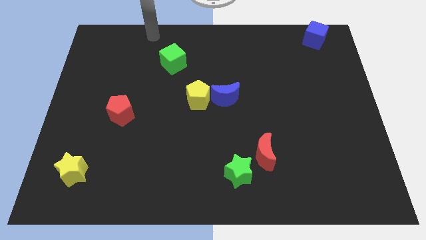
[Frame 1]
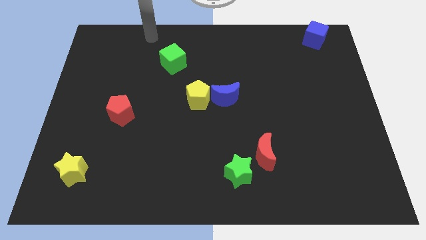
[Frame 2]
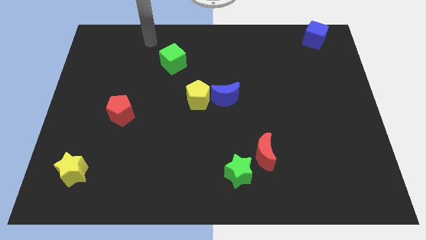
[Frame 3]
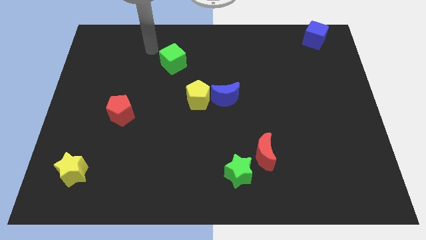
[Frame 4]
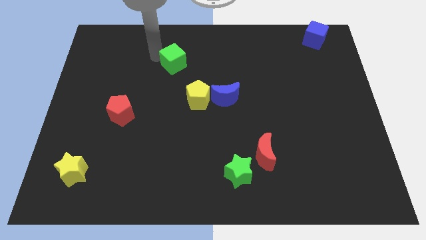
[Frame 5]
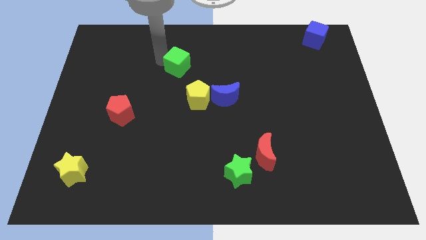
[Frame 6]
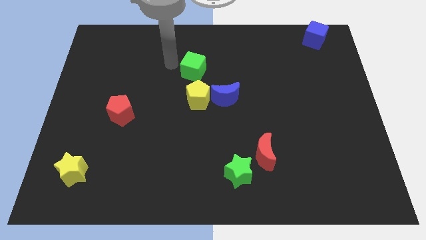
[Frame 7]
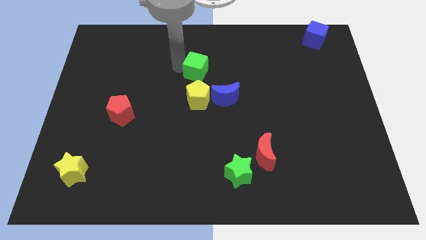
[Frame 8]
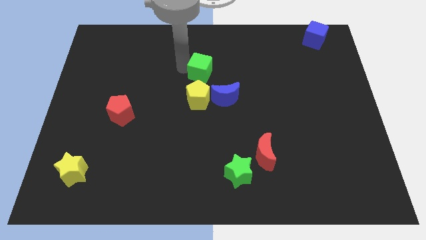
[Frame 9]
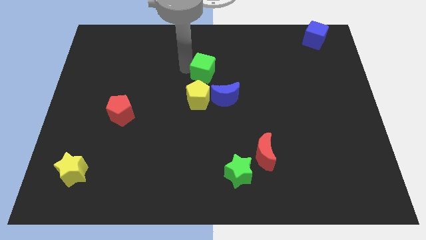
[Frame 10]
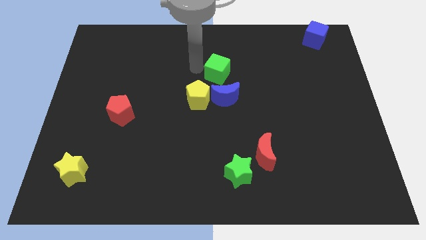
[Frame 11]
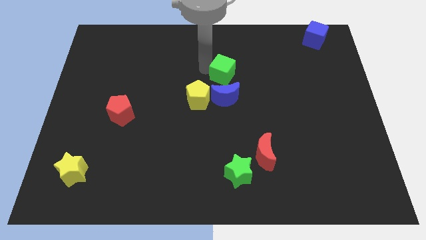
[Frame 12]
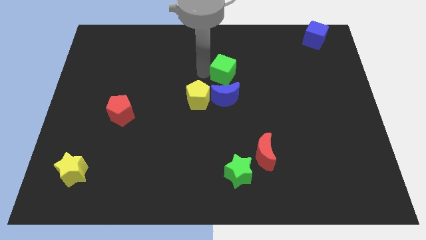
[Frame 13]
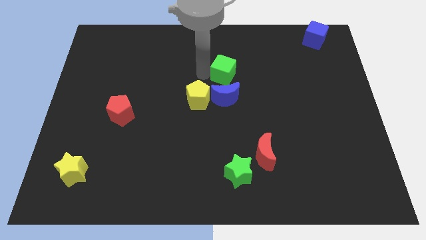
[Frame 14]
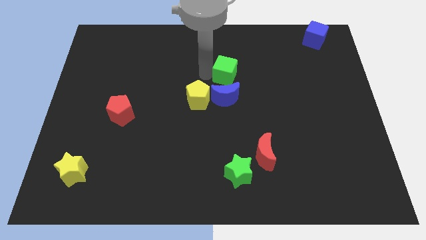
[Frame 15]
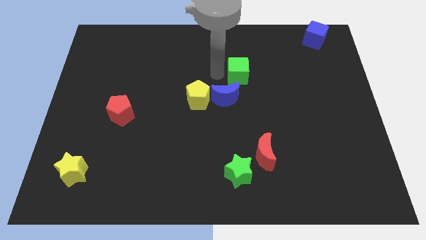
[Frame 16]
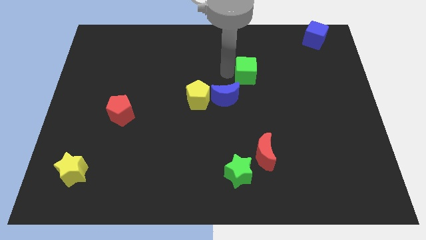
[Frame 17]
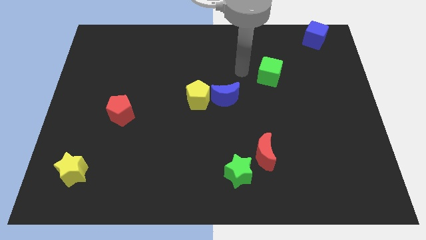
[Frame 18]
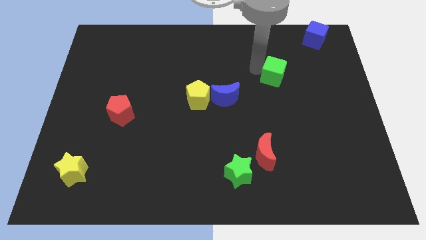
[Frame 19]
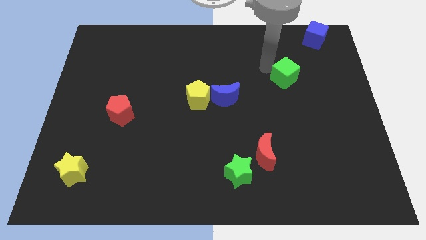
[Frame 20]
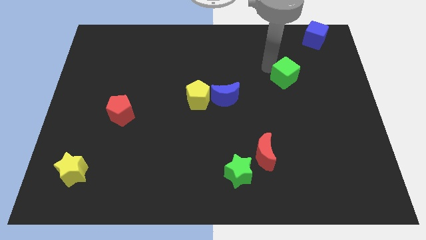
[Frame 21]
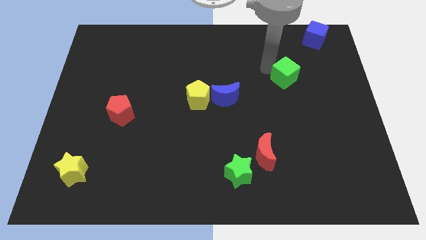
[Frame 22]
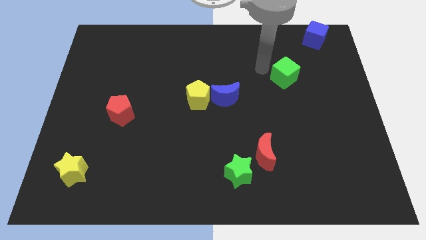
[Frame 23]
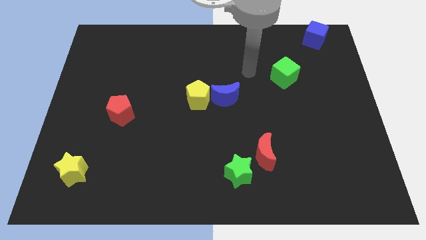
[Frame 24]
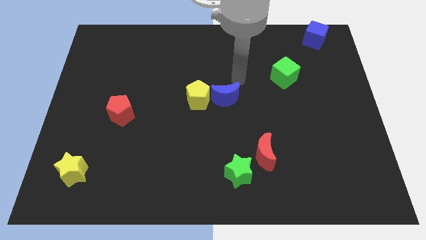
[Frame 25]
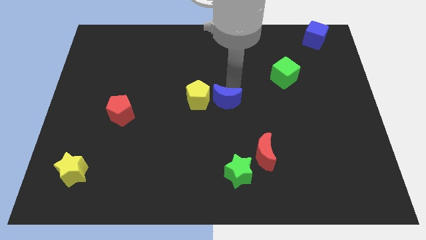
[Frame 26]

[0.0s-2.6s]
move the green cube diagonal below the blue cube

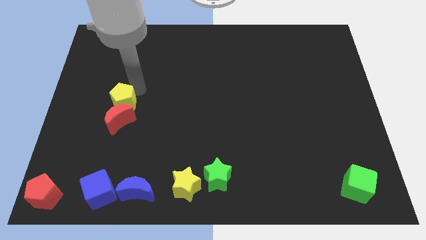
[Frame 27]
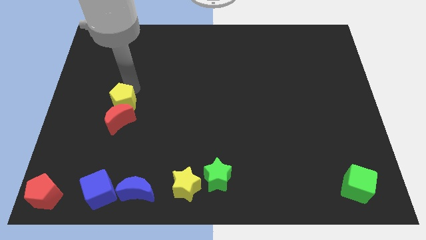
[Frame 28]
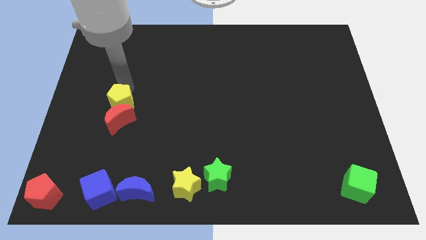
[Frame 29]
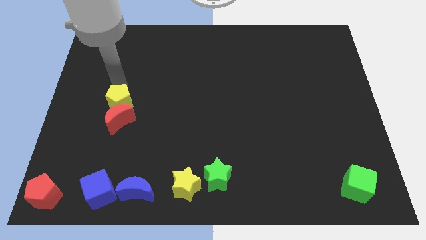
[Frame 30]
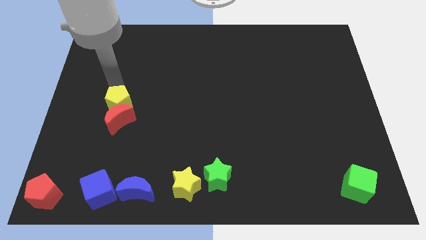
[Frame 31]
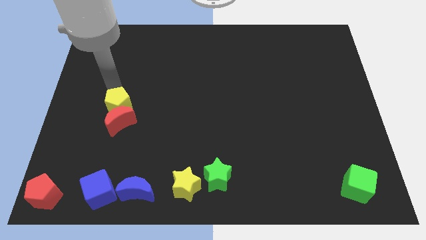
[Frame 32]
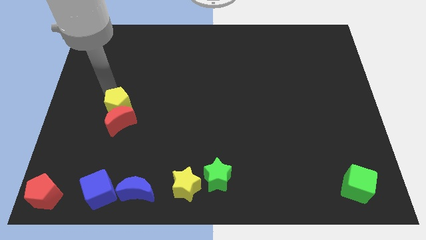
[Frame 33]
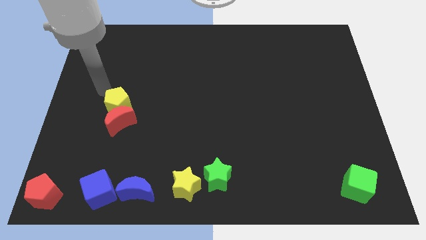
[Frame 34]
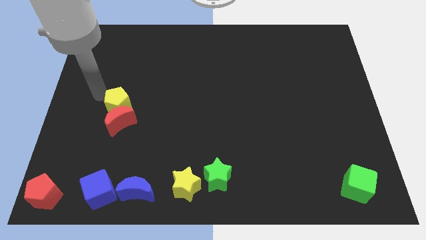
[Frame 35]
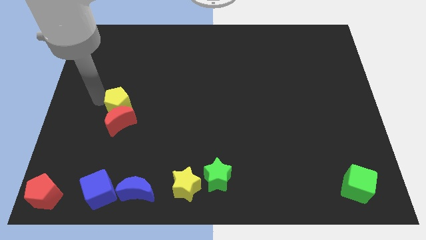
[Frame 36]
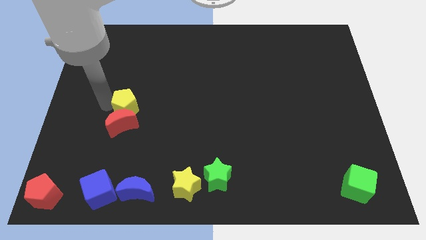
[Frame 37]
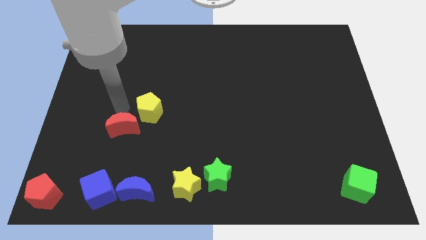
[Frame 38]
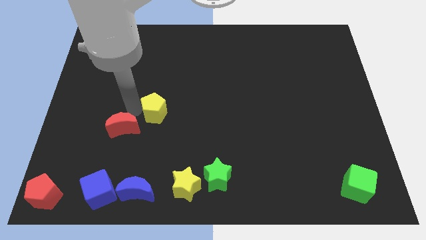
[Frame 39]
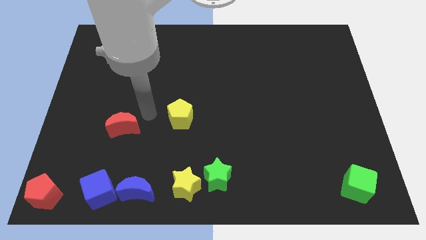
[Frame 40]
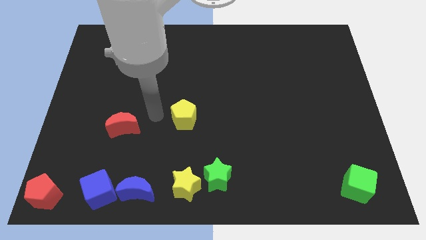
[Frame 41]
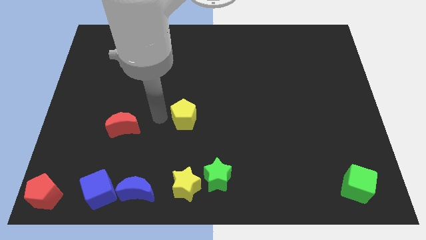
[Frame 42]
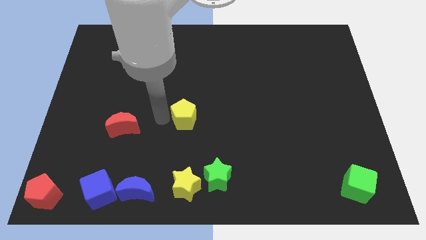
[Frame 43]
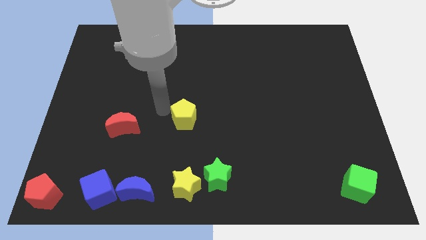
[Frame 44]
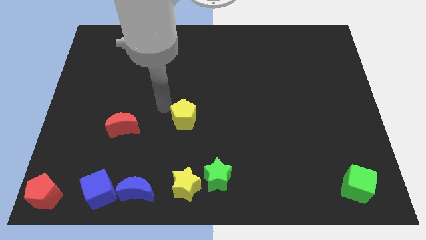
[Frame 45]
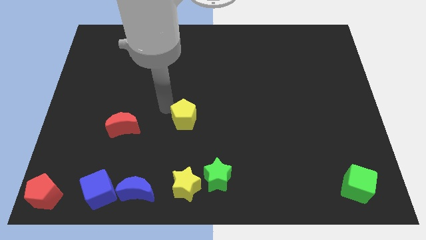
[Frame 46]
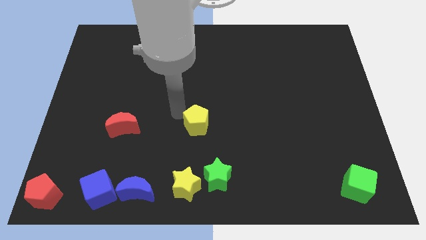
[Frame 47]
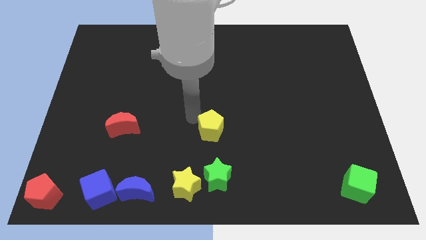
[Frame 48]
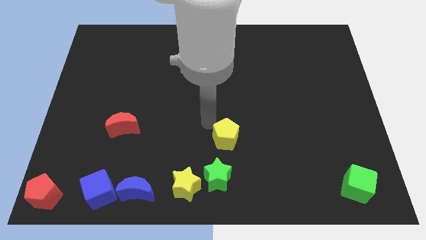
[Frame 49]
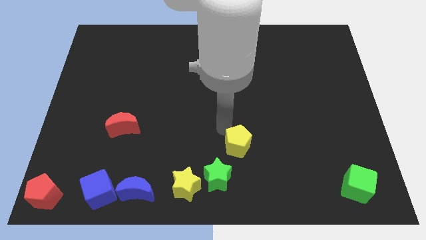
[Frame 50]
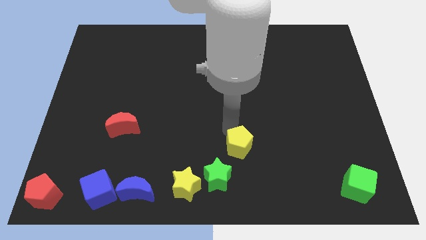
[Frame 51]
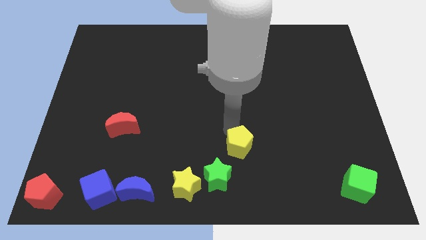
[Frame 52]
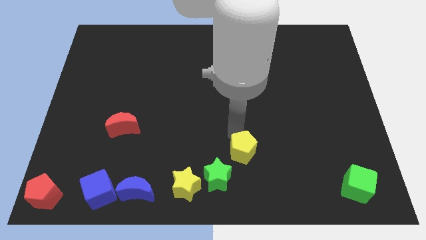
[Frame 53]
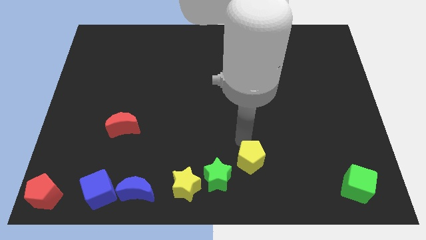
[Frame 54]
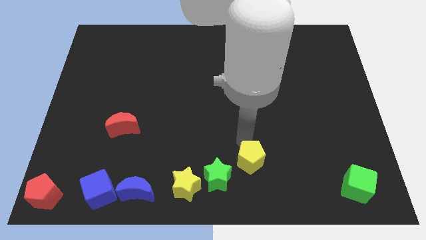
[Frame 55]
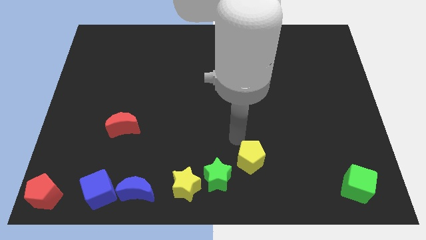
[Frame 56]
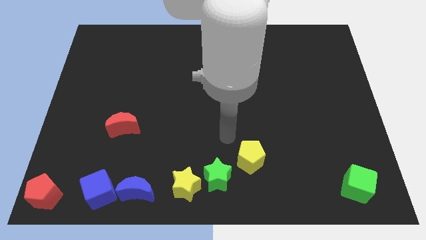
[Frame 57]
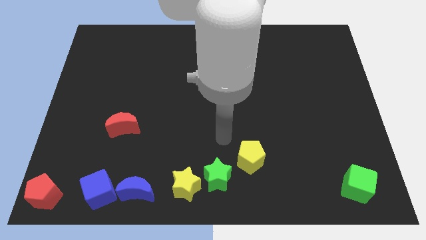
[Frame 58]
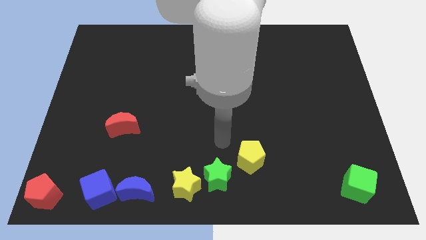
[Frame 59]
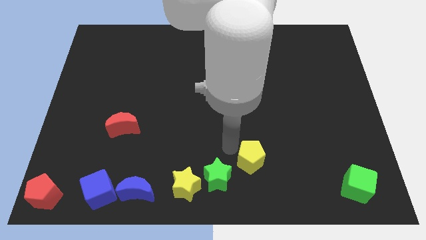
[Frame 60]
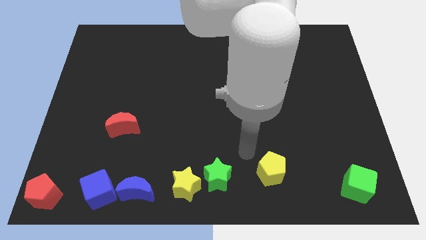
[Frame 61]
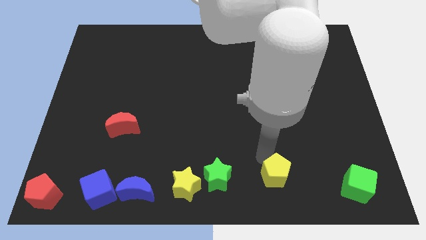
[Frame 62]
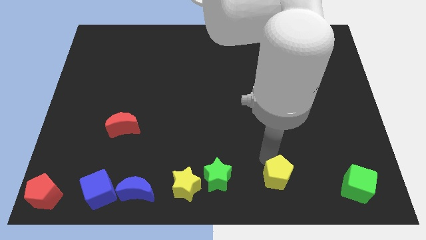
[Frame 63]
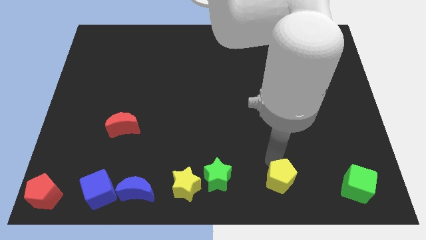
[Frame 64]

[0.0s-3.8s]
place the yellow pentagon in between the green star and the green cube

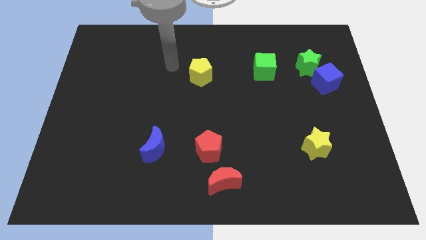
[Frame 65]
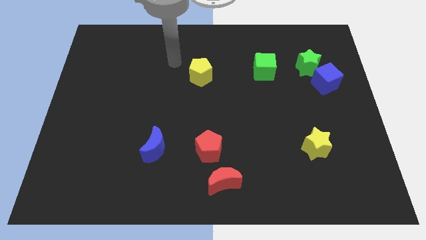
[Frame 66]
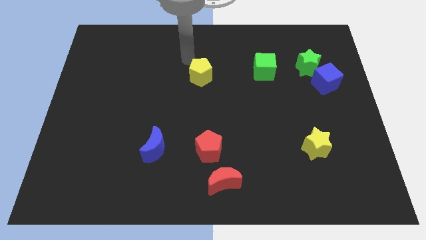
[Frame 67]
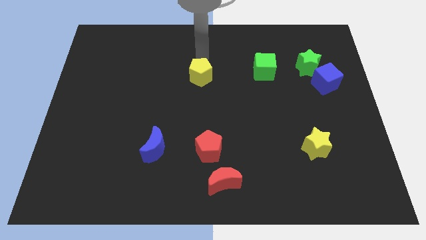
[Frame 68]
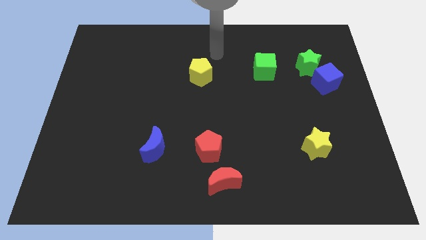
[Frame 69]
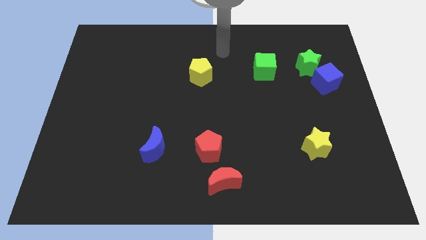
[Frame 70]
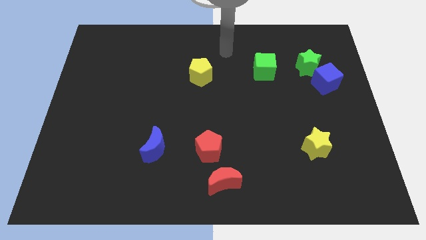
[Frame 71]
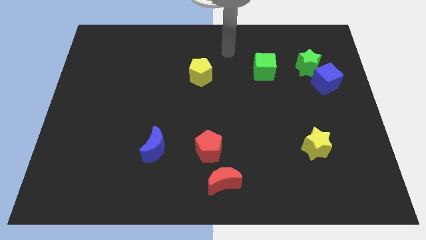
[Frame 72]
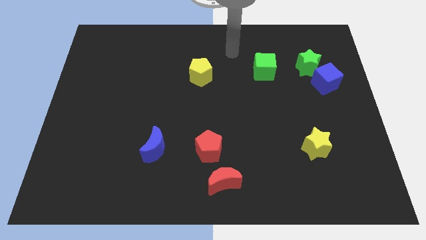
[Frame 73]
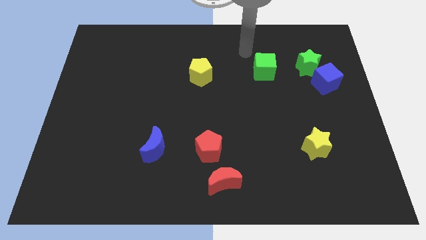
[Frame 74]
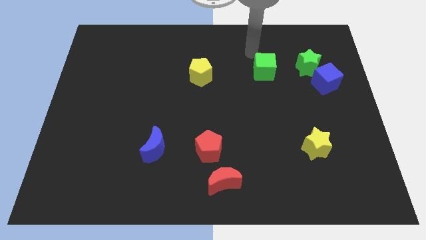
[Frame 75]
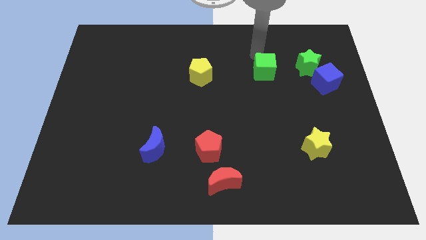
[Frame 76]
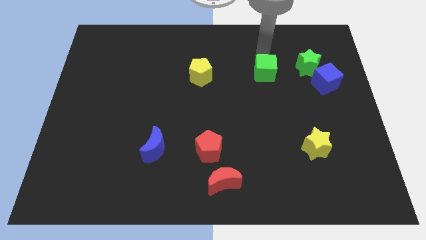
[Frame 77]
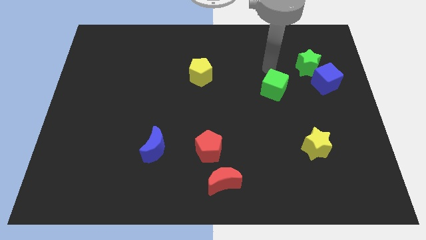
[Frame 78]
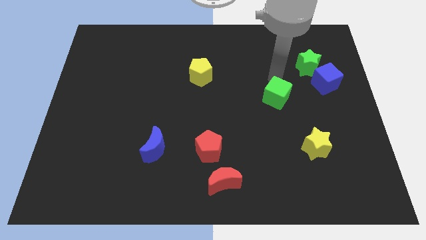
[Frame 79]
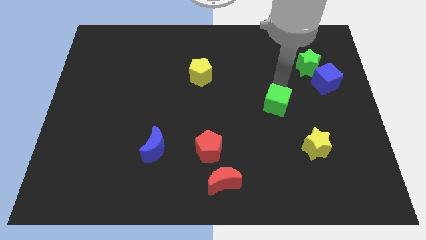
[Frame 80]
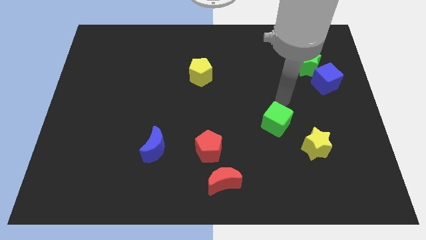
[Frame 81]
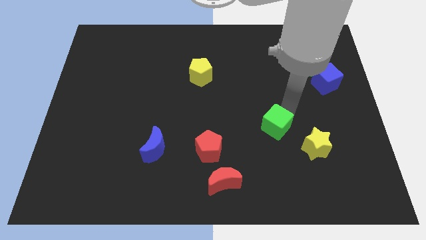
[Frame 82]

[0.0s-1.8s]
move the green cube towards the bottom center

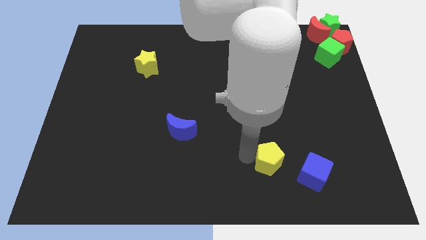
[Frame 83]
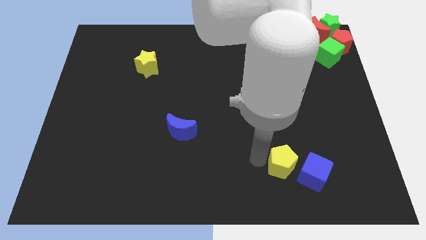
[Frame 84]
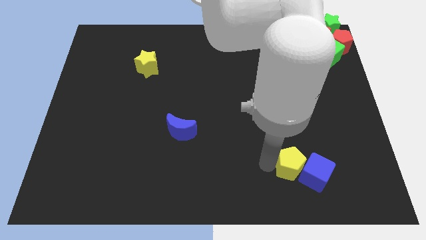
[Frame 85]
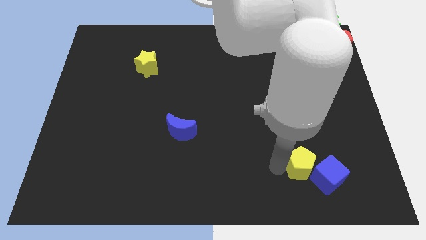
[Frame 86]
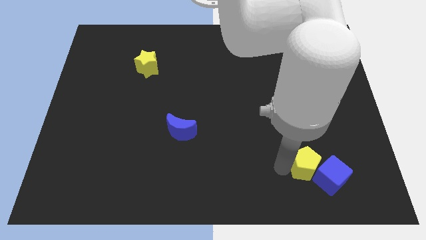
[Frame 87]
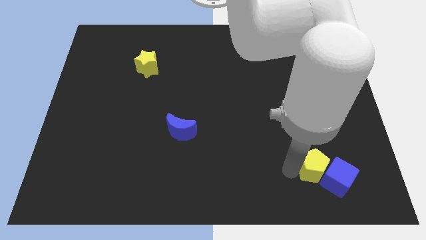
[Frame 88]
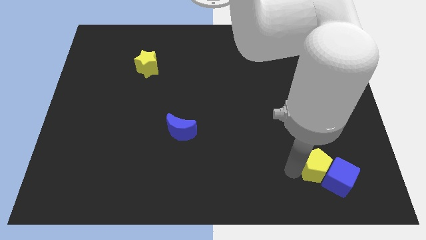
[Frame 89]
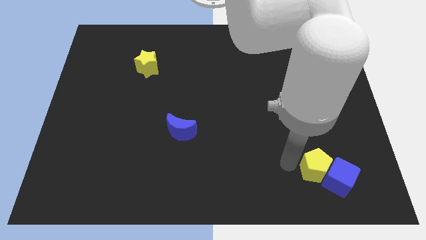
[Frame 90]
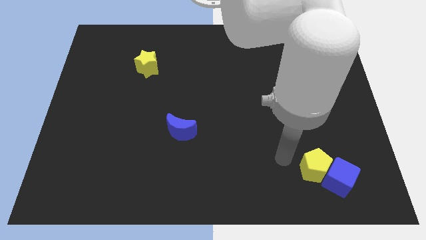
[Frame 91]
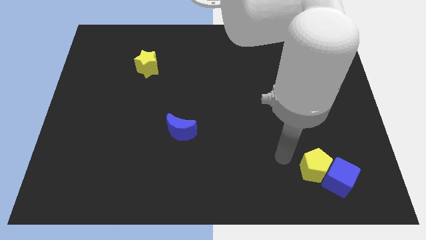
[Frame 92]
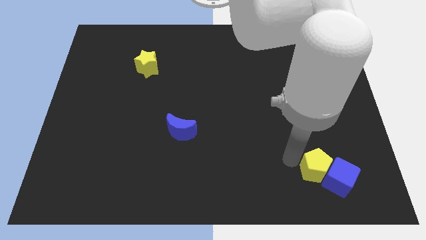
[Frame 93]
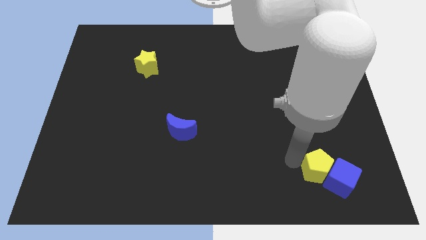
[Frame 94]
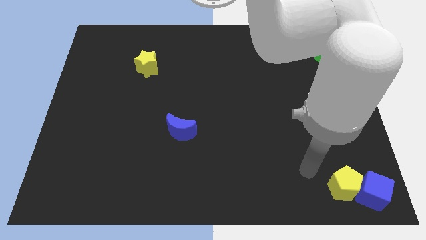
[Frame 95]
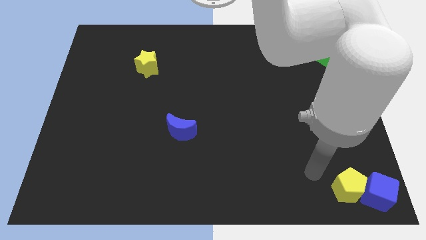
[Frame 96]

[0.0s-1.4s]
arrange the yellow pentagon and the blue cube at the bottom right of the board
